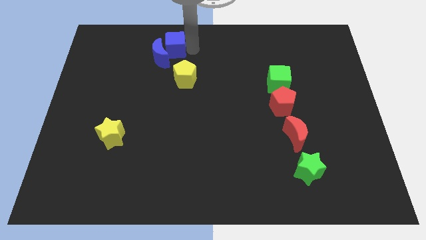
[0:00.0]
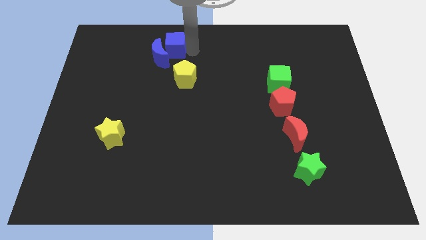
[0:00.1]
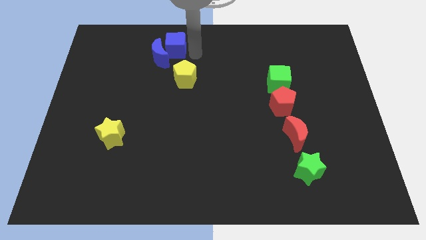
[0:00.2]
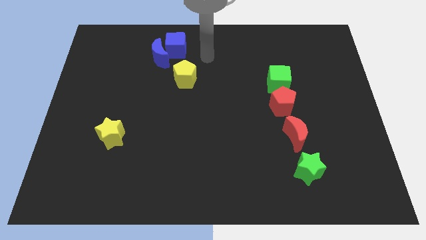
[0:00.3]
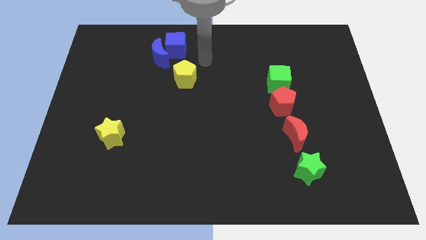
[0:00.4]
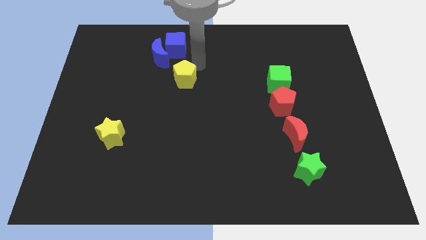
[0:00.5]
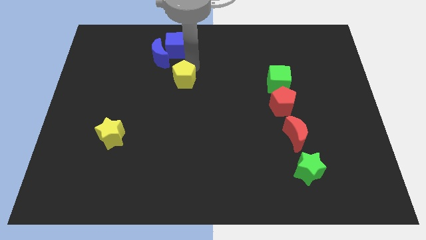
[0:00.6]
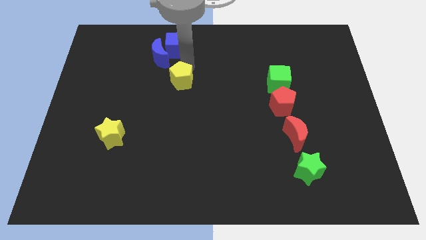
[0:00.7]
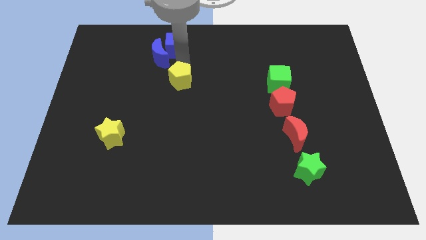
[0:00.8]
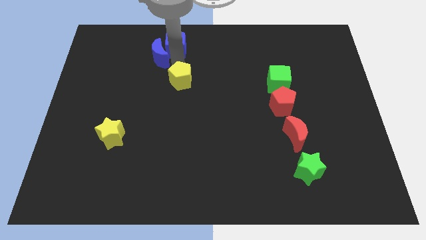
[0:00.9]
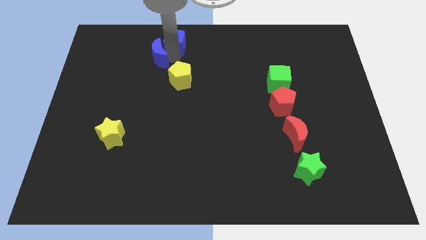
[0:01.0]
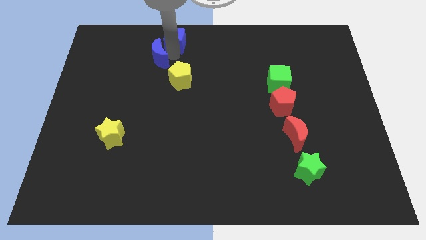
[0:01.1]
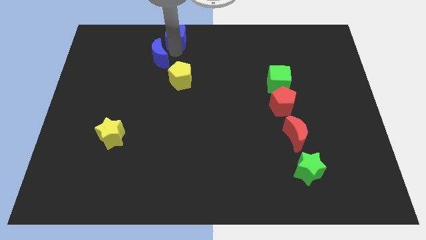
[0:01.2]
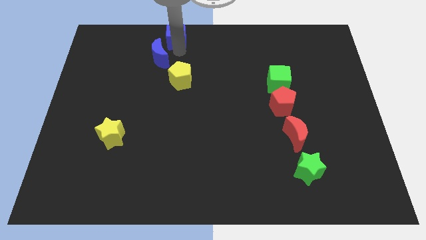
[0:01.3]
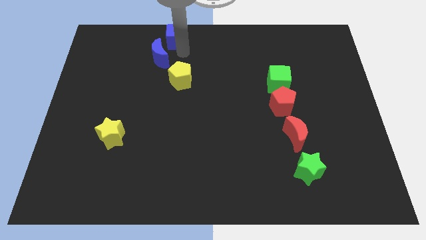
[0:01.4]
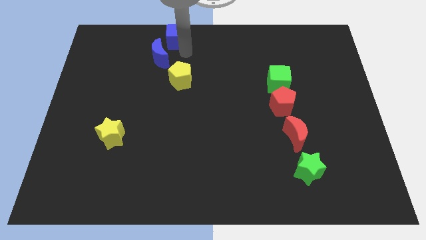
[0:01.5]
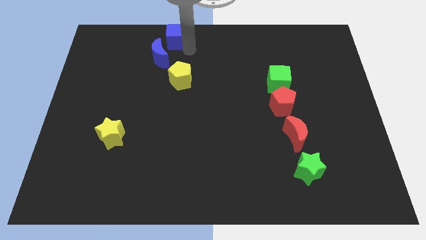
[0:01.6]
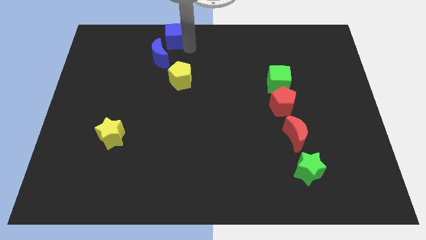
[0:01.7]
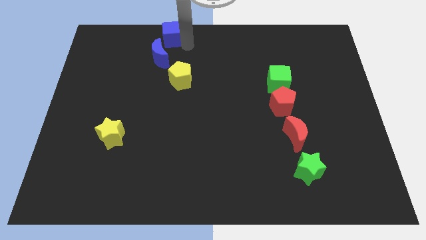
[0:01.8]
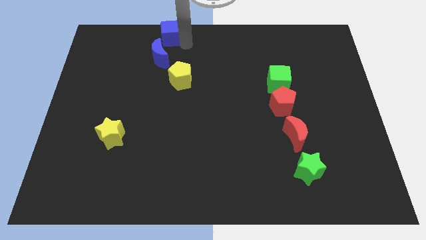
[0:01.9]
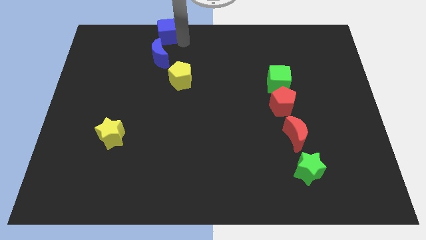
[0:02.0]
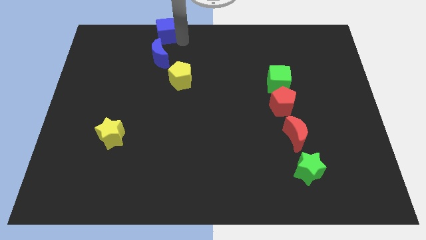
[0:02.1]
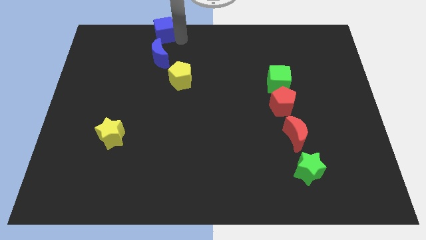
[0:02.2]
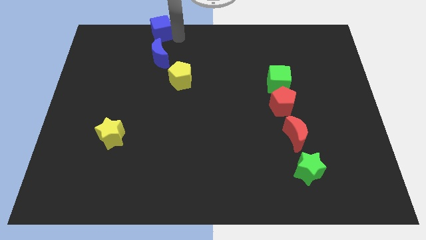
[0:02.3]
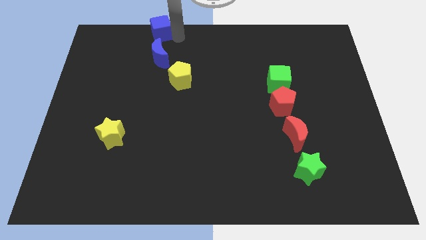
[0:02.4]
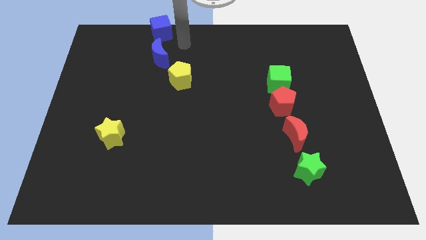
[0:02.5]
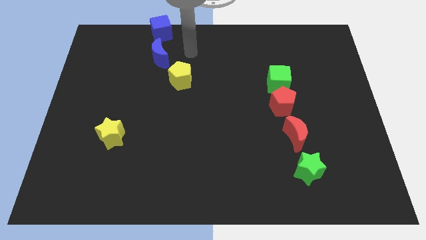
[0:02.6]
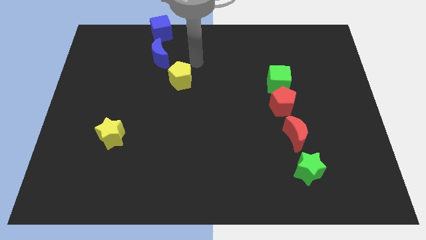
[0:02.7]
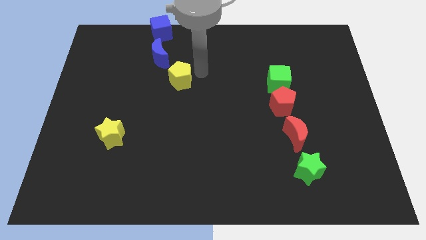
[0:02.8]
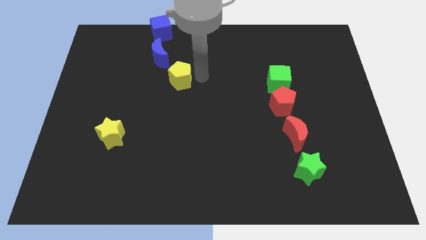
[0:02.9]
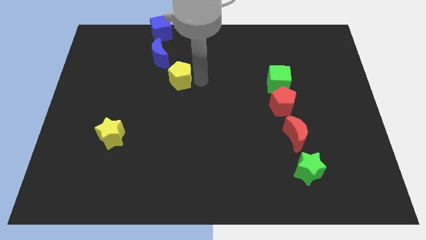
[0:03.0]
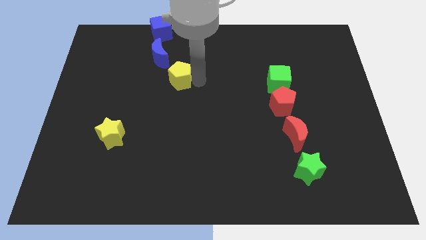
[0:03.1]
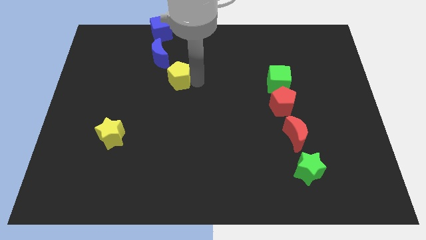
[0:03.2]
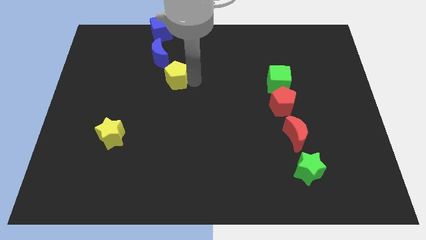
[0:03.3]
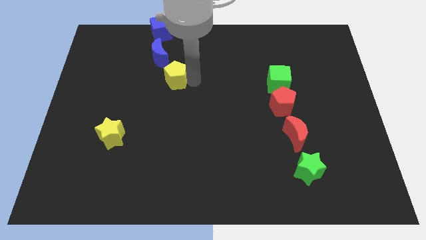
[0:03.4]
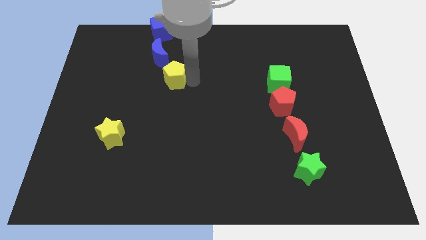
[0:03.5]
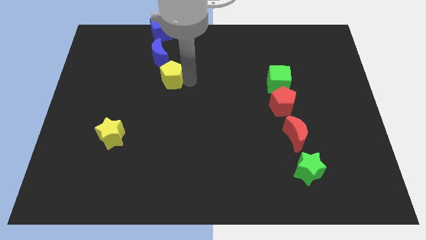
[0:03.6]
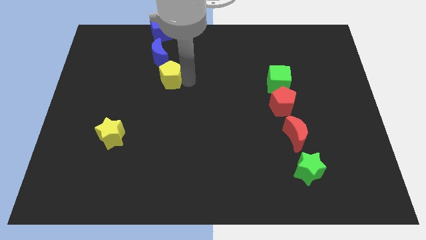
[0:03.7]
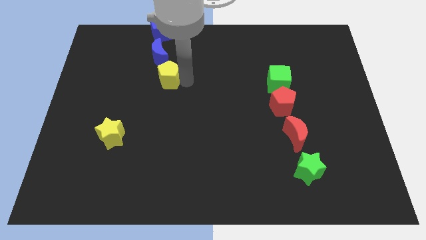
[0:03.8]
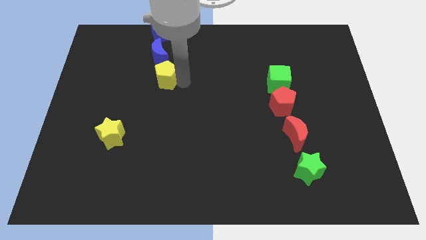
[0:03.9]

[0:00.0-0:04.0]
make vertical line out of blue blocks and the yellow pentagon

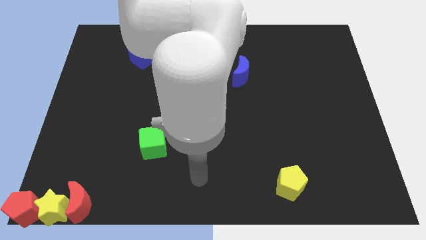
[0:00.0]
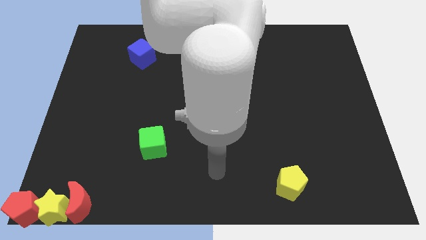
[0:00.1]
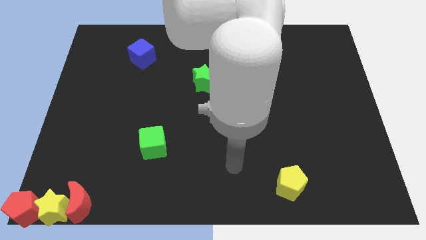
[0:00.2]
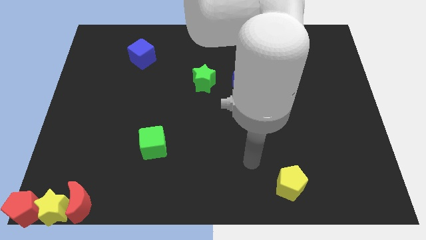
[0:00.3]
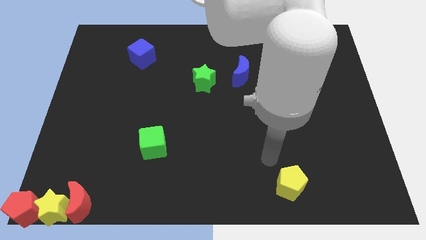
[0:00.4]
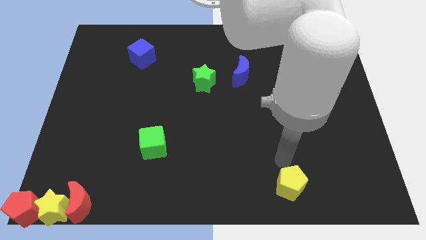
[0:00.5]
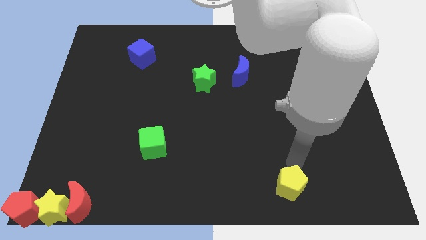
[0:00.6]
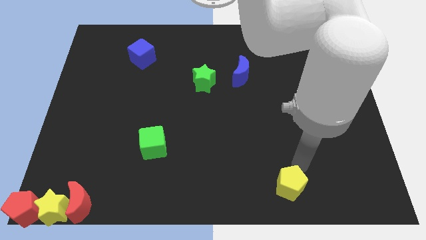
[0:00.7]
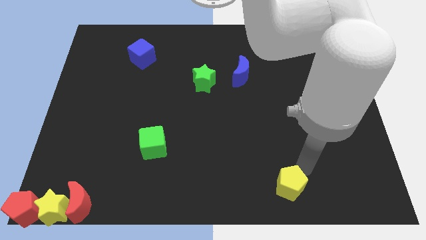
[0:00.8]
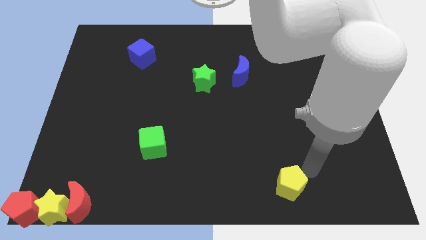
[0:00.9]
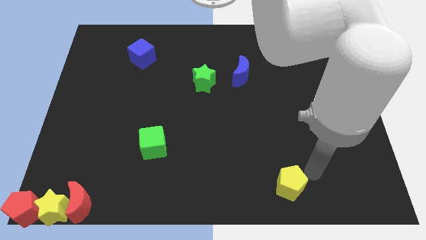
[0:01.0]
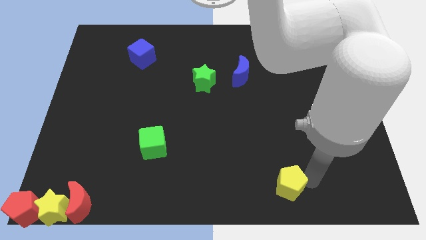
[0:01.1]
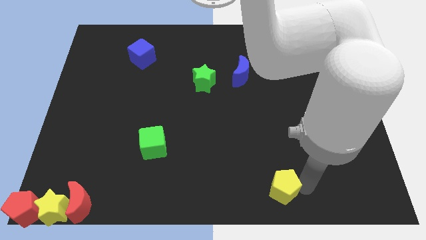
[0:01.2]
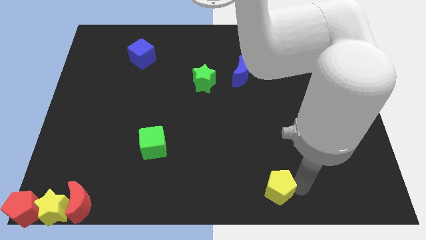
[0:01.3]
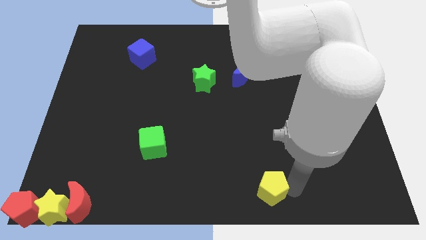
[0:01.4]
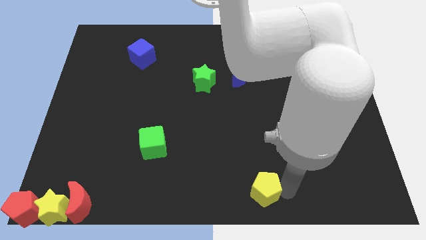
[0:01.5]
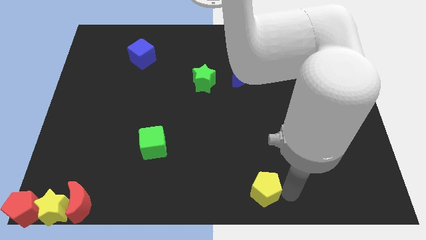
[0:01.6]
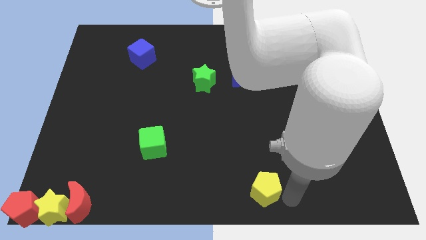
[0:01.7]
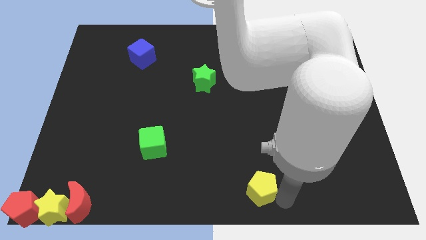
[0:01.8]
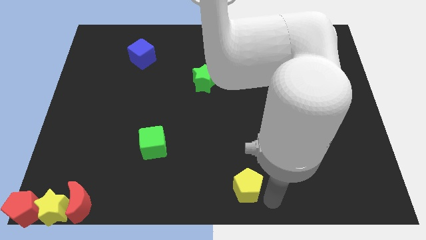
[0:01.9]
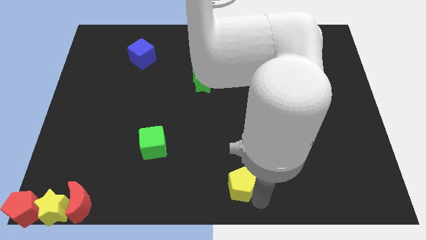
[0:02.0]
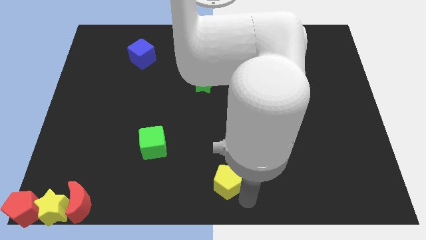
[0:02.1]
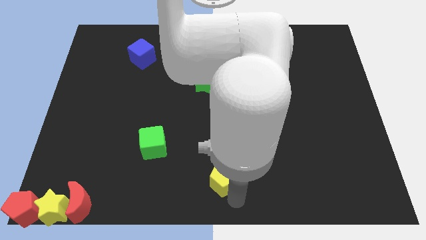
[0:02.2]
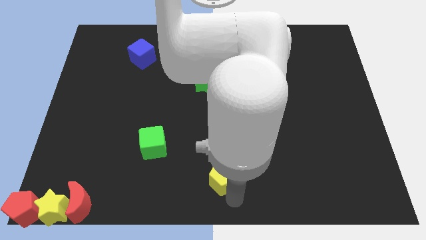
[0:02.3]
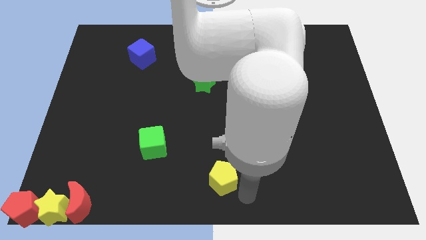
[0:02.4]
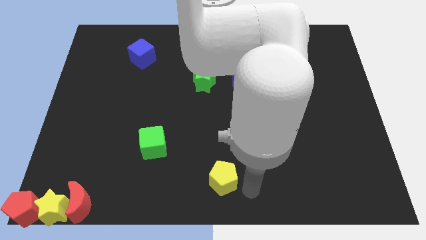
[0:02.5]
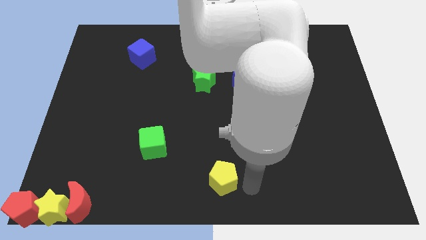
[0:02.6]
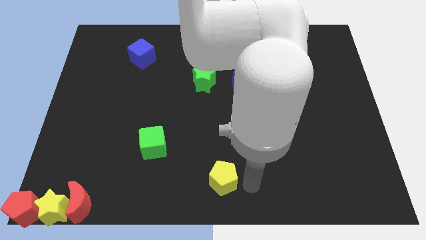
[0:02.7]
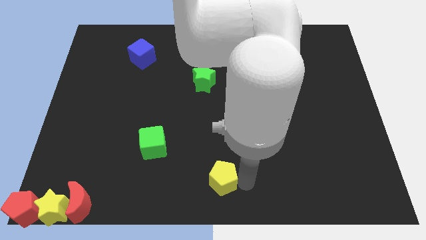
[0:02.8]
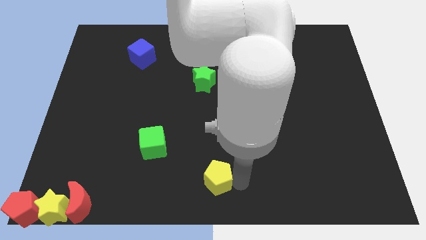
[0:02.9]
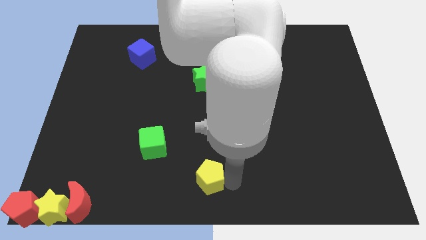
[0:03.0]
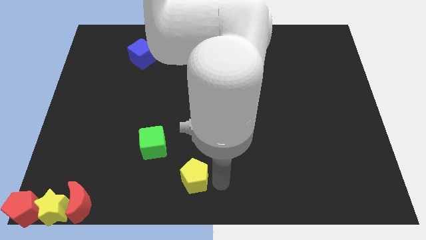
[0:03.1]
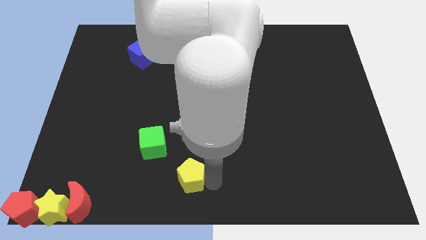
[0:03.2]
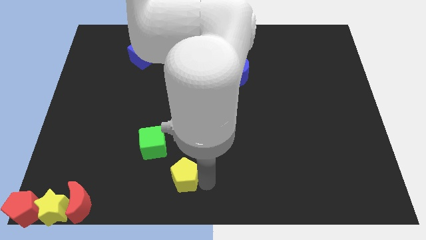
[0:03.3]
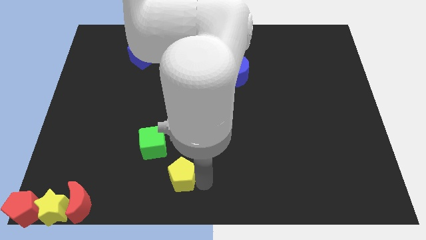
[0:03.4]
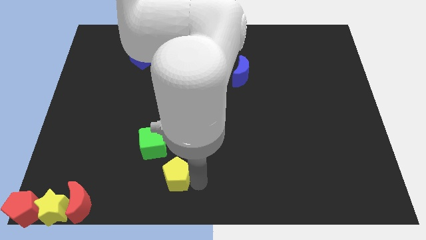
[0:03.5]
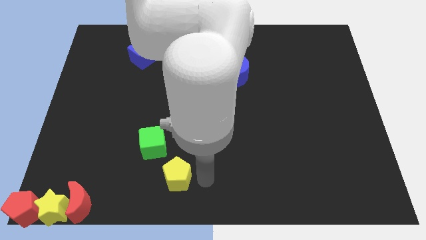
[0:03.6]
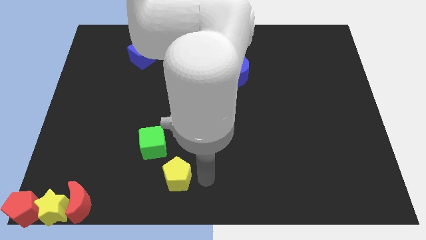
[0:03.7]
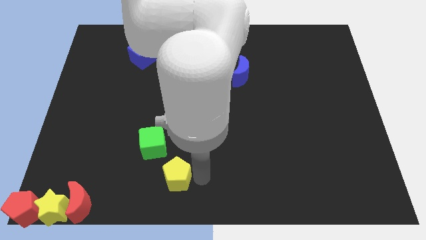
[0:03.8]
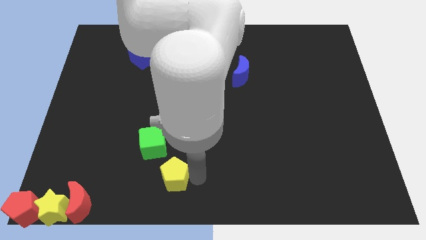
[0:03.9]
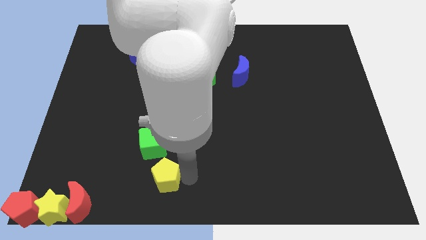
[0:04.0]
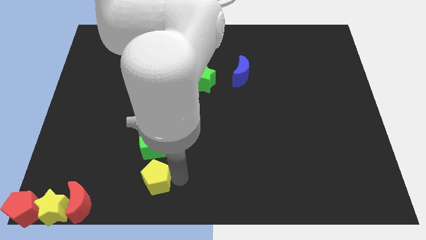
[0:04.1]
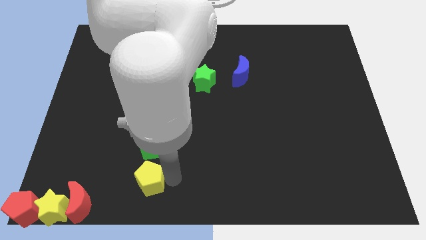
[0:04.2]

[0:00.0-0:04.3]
place the yellow pentagon below the green cube

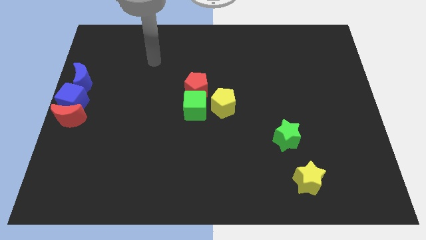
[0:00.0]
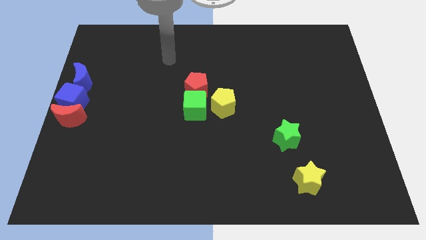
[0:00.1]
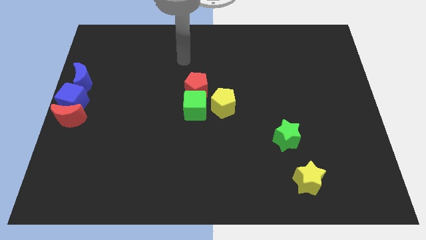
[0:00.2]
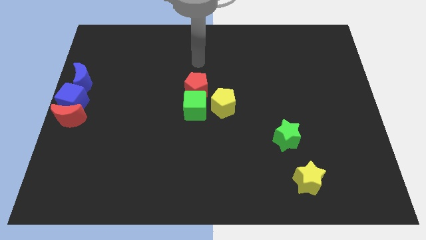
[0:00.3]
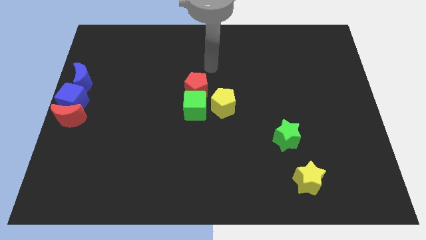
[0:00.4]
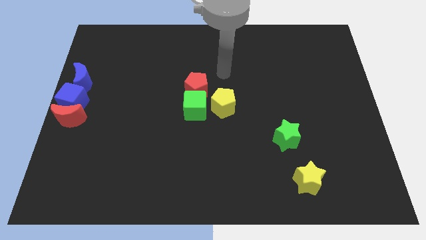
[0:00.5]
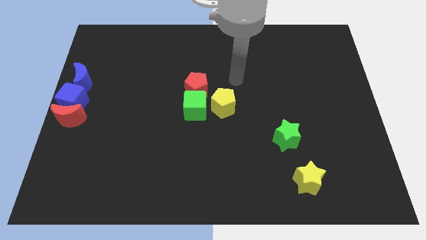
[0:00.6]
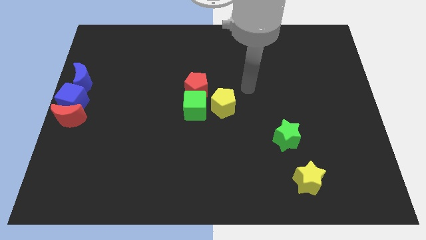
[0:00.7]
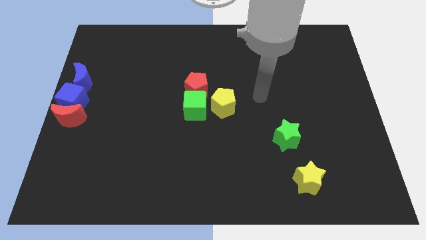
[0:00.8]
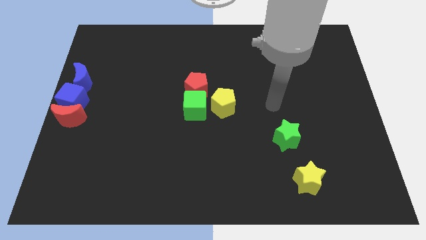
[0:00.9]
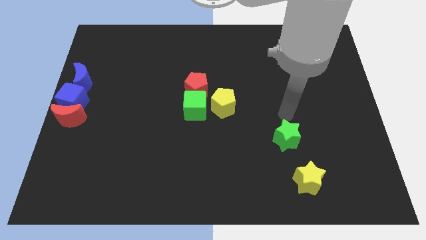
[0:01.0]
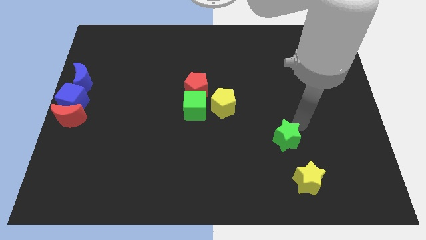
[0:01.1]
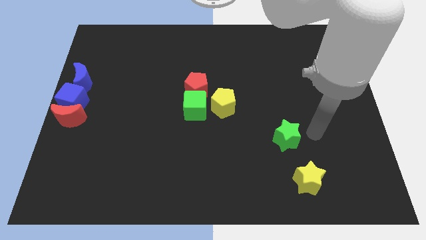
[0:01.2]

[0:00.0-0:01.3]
place the arm to the right of the green star
